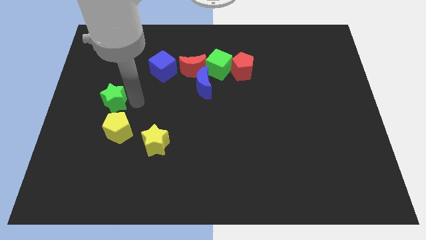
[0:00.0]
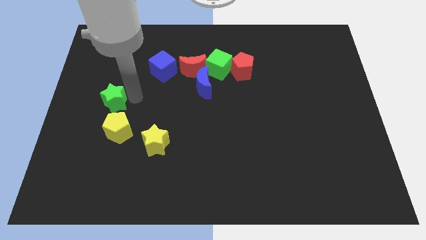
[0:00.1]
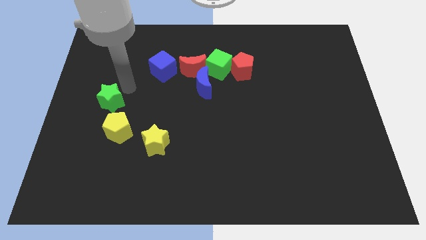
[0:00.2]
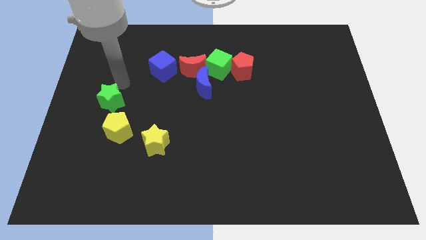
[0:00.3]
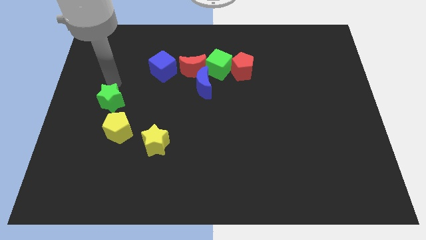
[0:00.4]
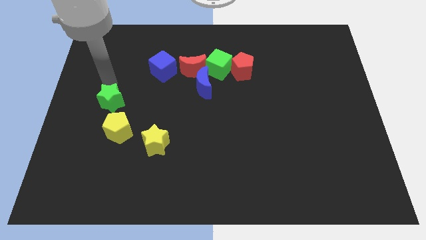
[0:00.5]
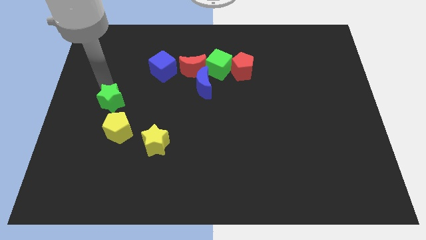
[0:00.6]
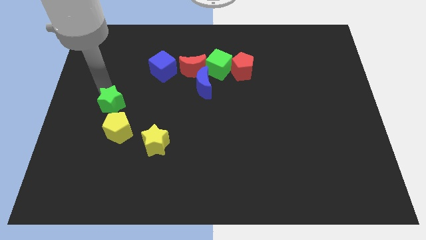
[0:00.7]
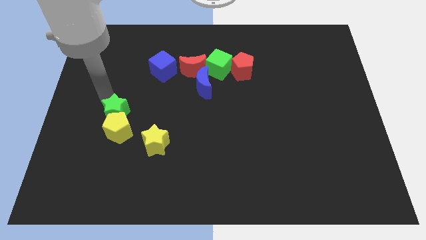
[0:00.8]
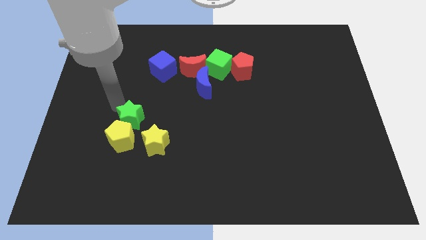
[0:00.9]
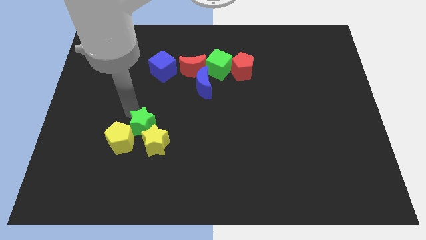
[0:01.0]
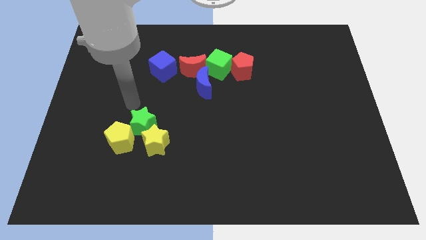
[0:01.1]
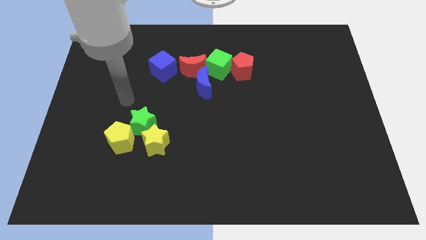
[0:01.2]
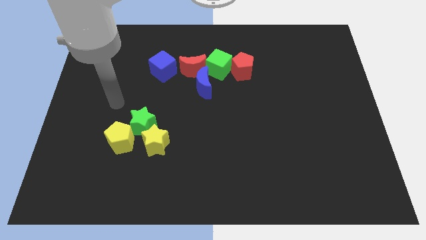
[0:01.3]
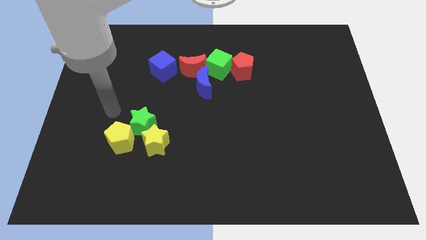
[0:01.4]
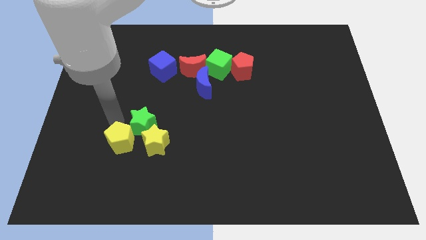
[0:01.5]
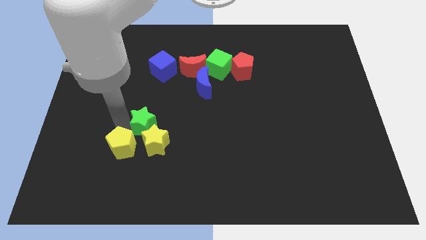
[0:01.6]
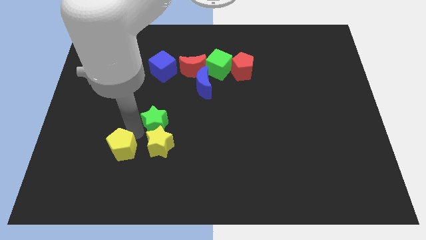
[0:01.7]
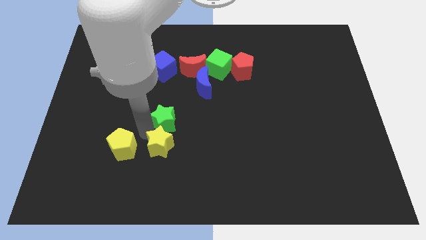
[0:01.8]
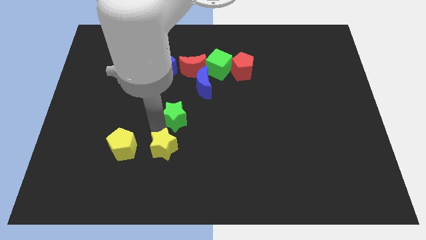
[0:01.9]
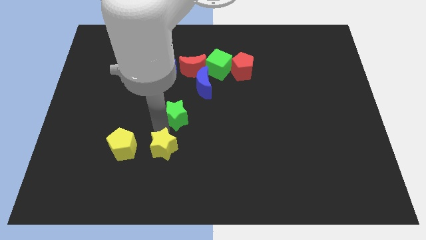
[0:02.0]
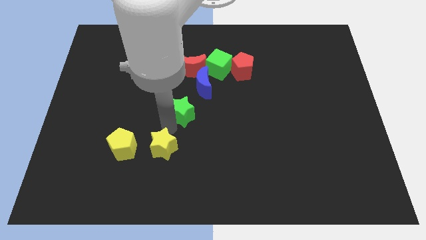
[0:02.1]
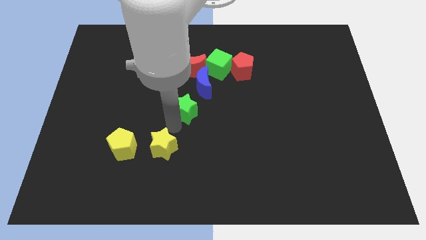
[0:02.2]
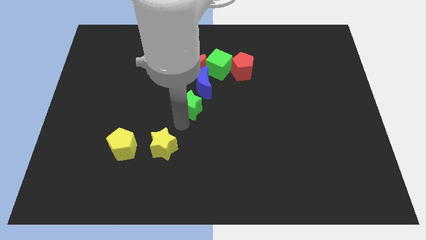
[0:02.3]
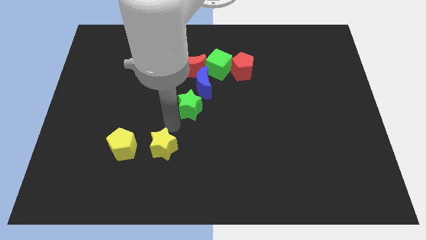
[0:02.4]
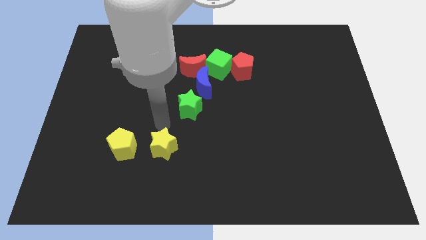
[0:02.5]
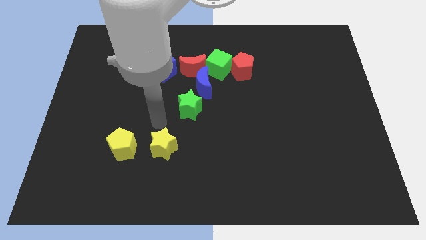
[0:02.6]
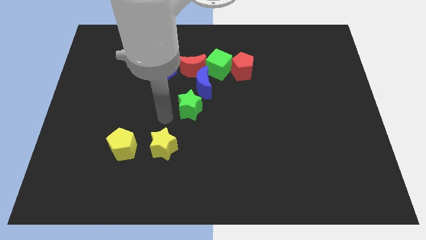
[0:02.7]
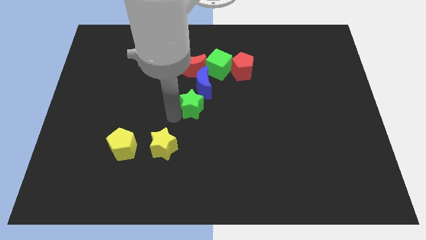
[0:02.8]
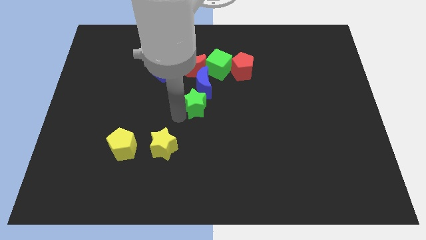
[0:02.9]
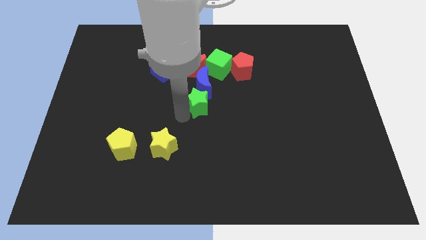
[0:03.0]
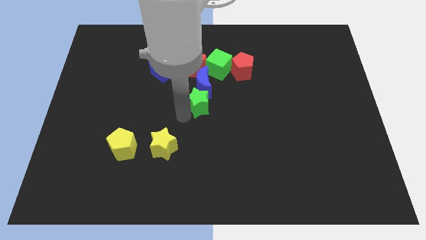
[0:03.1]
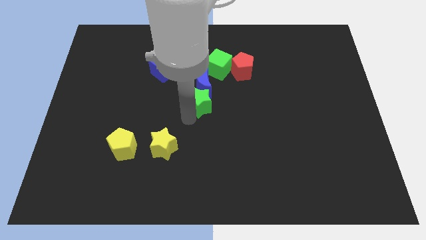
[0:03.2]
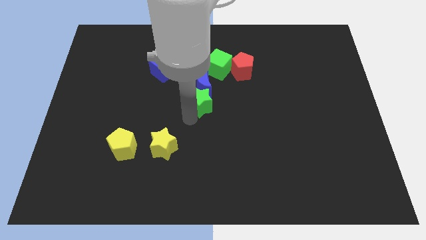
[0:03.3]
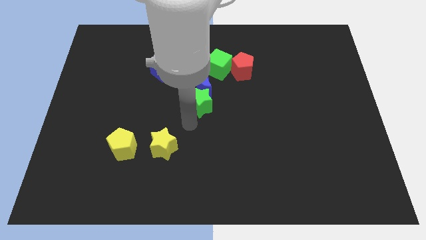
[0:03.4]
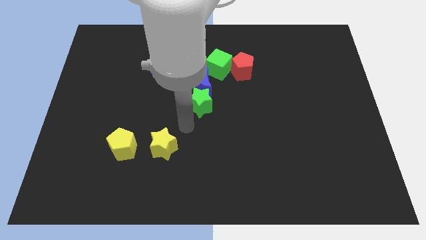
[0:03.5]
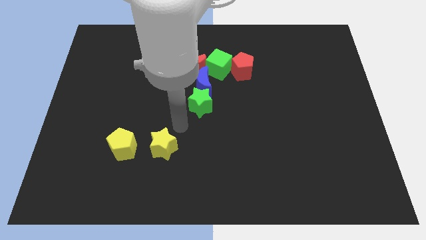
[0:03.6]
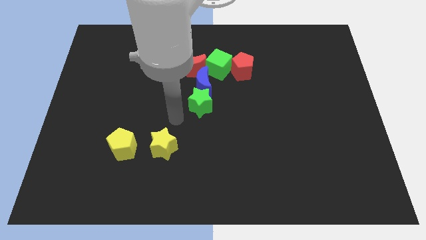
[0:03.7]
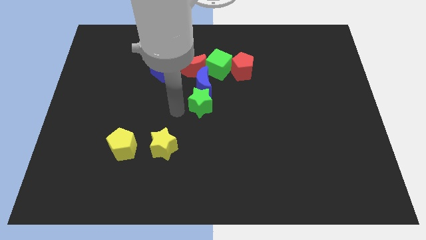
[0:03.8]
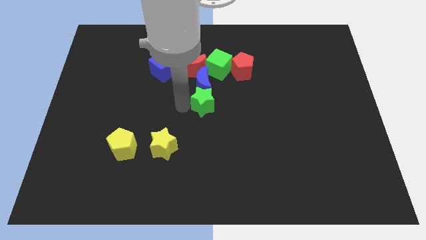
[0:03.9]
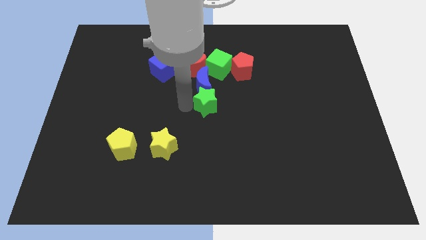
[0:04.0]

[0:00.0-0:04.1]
place the green star below the blue moon

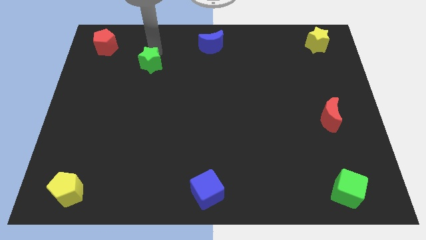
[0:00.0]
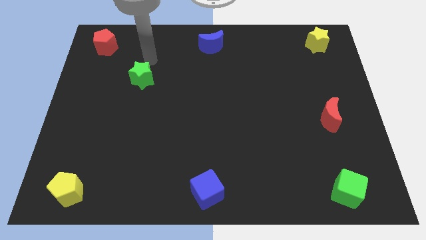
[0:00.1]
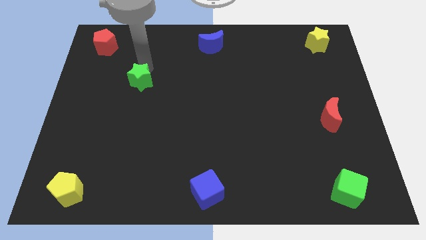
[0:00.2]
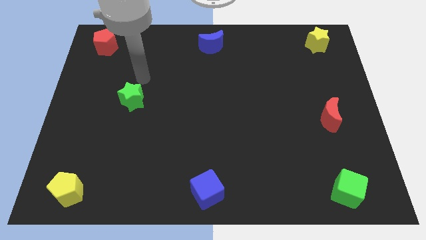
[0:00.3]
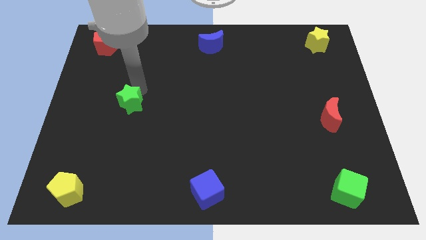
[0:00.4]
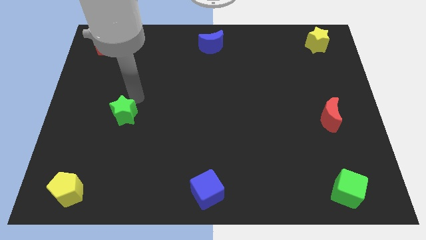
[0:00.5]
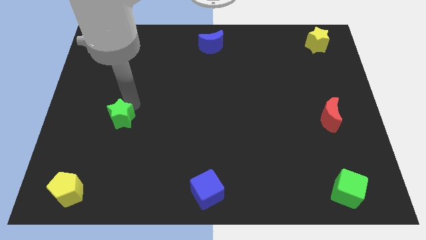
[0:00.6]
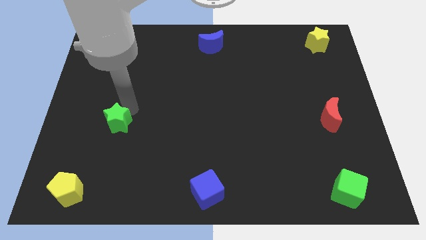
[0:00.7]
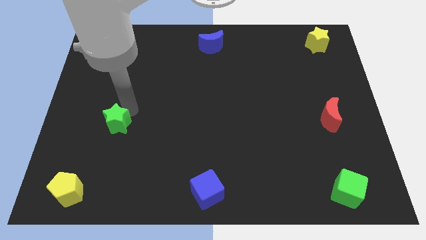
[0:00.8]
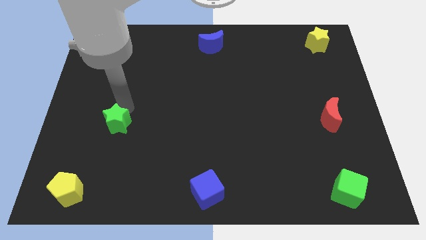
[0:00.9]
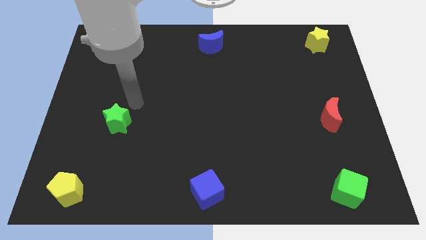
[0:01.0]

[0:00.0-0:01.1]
push the green star slightly towards the yellow pentagon

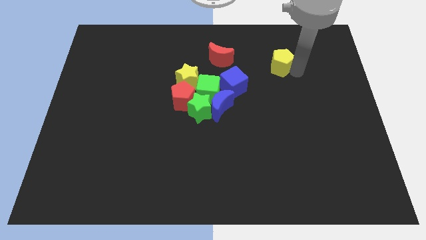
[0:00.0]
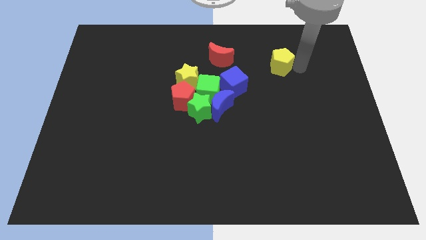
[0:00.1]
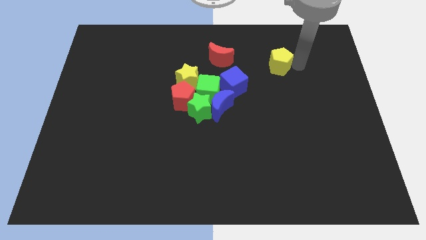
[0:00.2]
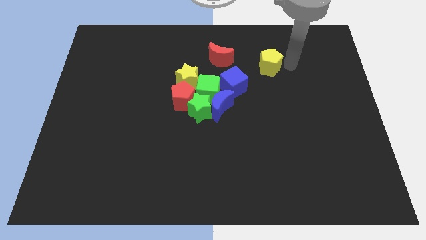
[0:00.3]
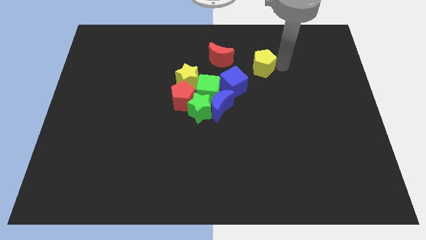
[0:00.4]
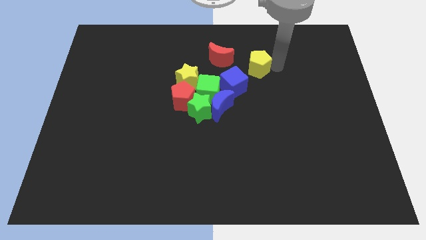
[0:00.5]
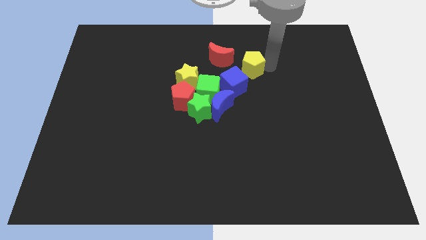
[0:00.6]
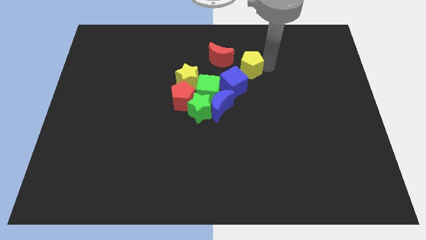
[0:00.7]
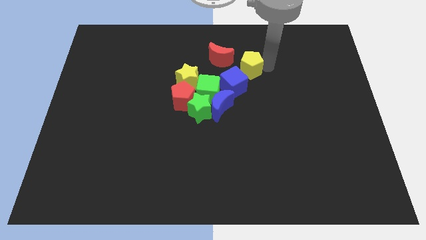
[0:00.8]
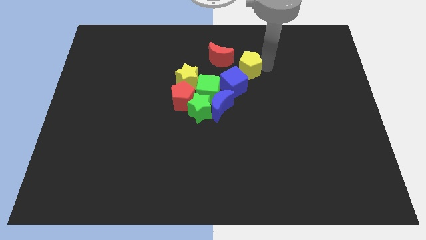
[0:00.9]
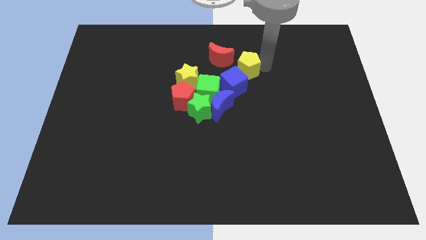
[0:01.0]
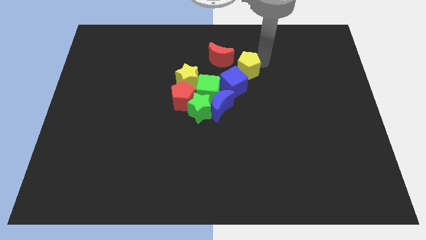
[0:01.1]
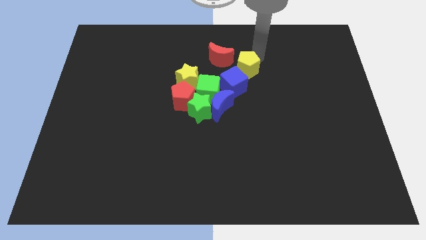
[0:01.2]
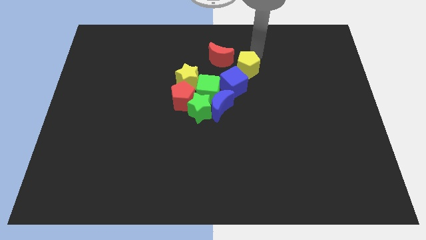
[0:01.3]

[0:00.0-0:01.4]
move the yellow pentagon diagonally to the bottom right of the red moon

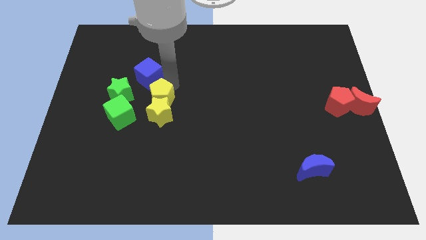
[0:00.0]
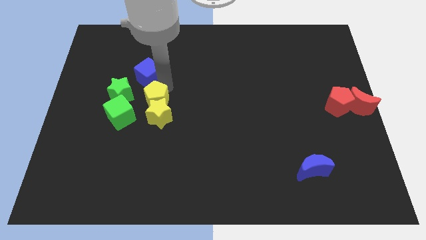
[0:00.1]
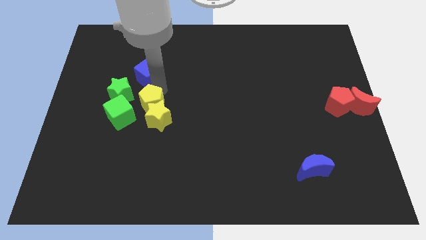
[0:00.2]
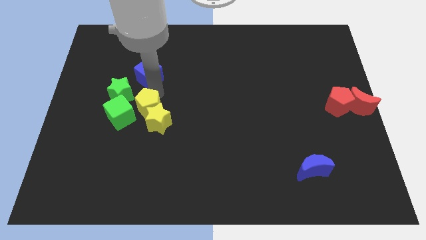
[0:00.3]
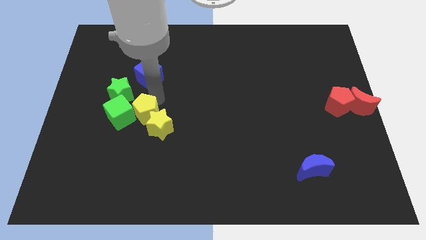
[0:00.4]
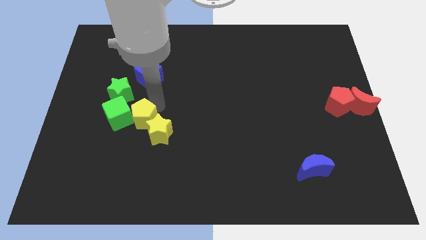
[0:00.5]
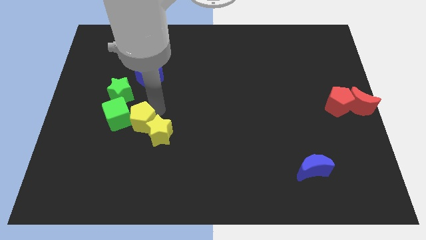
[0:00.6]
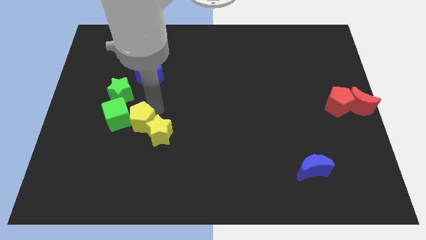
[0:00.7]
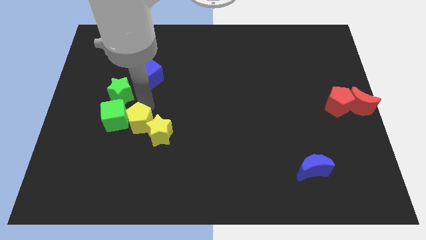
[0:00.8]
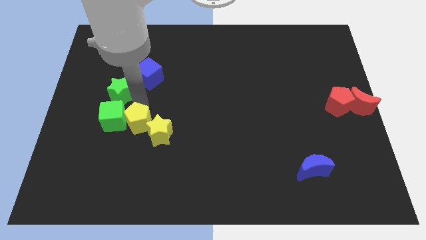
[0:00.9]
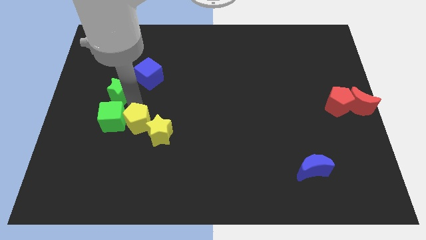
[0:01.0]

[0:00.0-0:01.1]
push the yellow blocks into the green cube

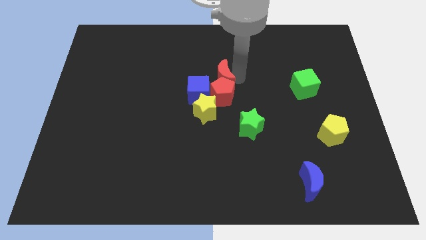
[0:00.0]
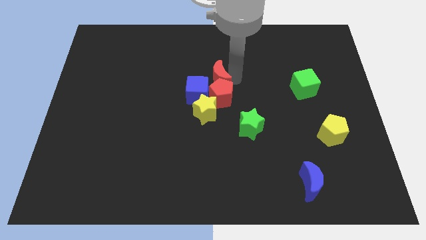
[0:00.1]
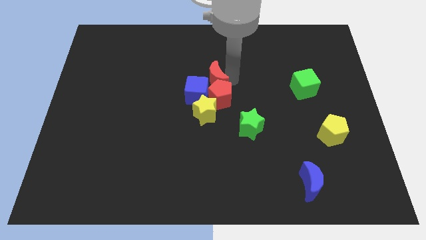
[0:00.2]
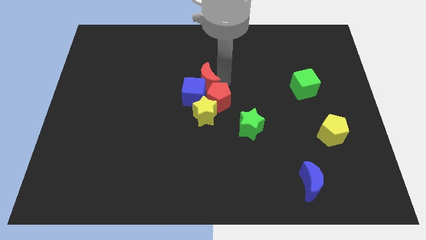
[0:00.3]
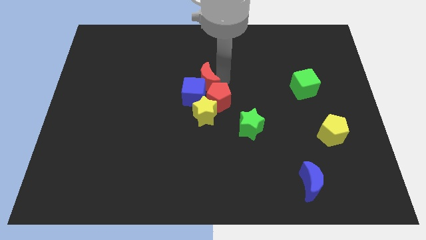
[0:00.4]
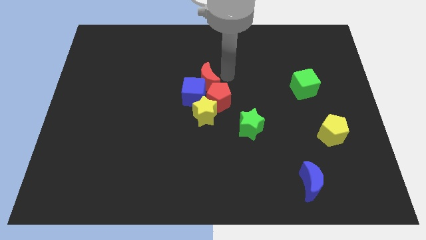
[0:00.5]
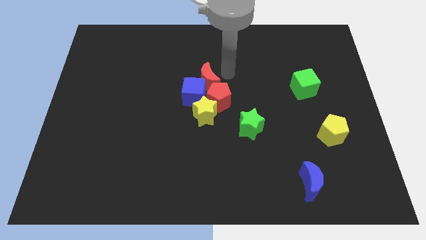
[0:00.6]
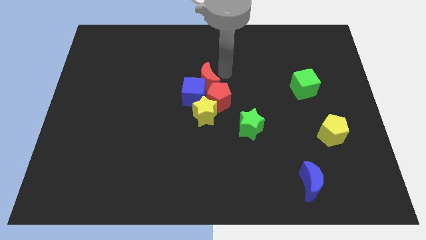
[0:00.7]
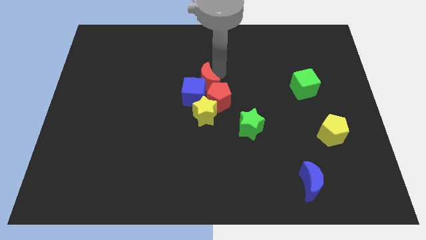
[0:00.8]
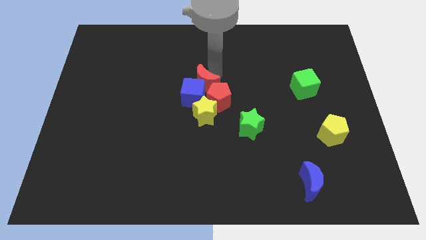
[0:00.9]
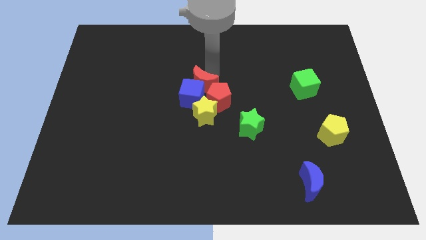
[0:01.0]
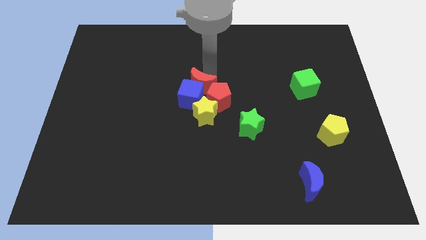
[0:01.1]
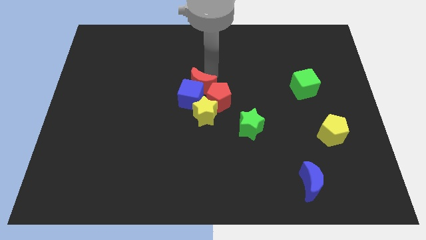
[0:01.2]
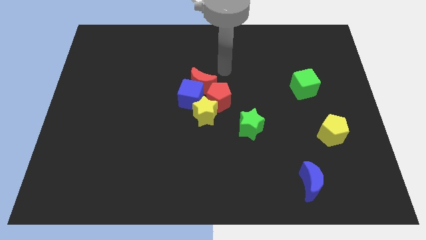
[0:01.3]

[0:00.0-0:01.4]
move the red crescent to the top of the blue cube
